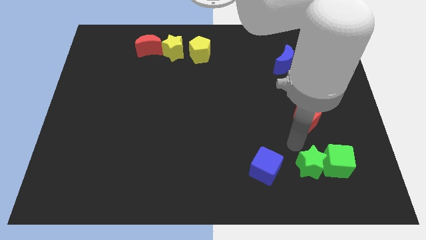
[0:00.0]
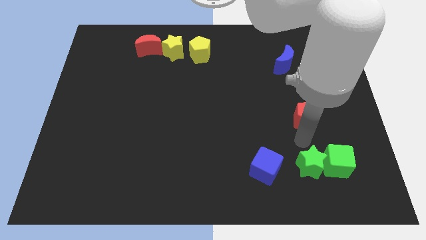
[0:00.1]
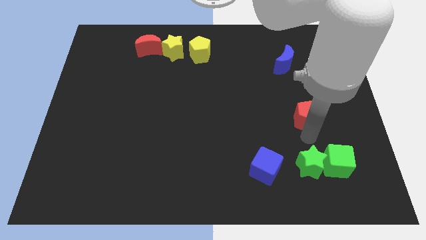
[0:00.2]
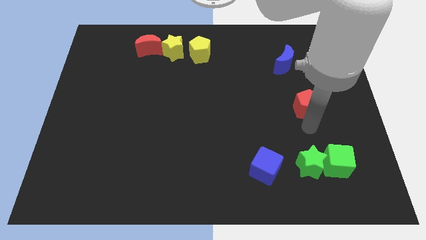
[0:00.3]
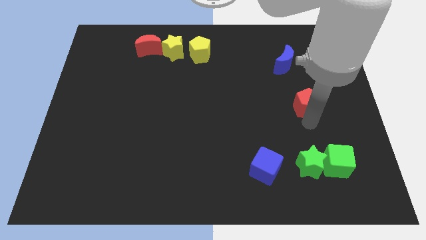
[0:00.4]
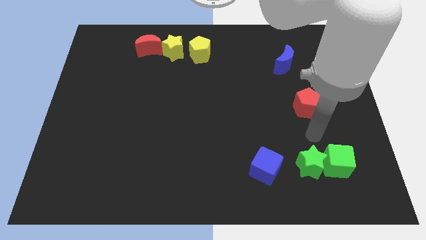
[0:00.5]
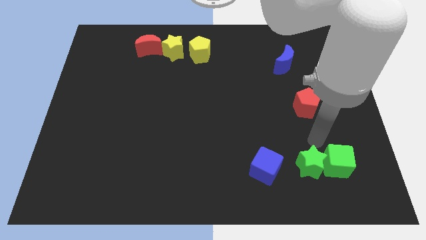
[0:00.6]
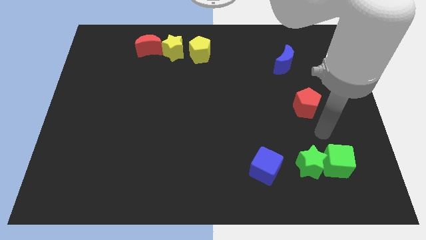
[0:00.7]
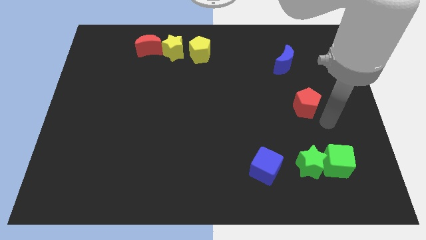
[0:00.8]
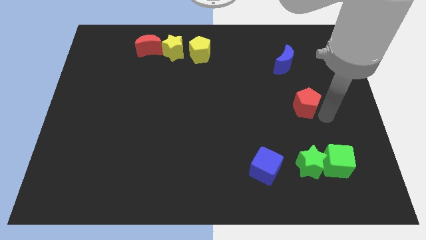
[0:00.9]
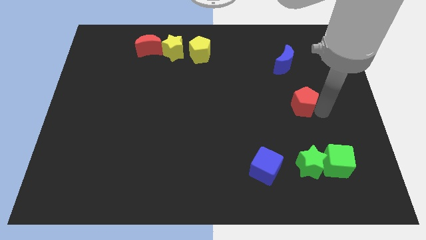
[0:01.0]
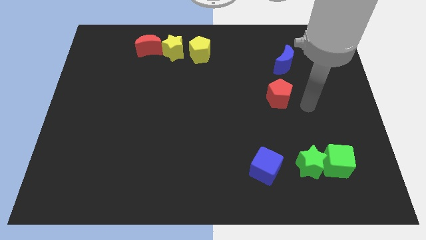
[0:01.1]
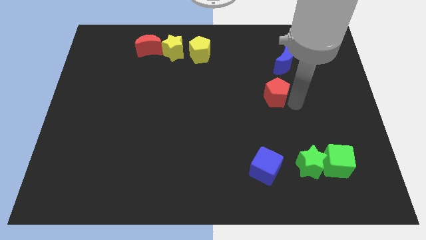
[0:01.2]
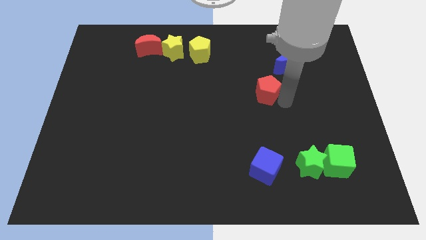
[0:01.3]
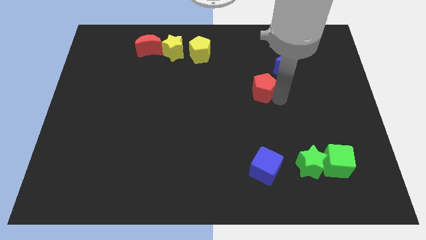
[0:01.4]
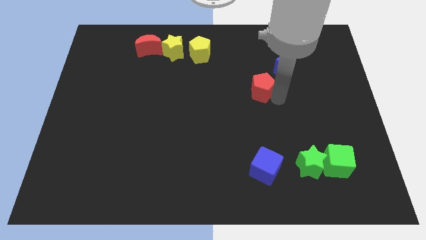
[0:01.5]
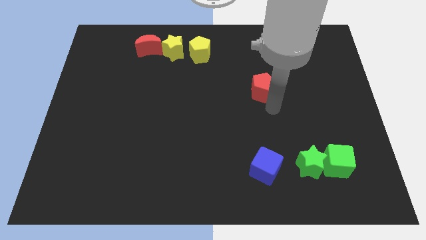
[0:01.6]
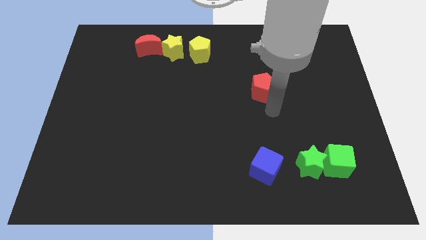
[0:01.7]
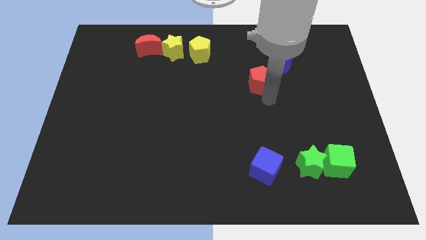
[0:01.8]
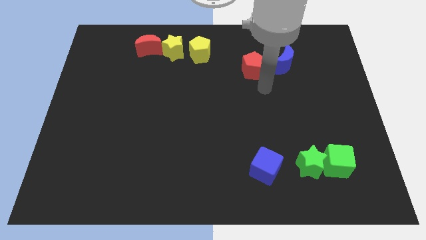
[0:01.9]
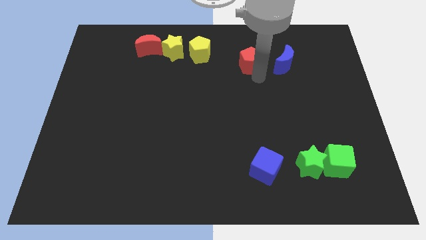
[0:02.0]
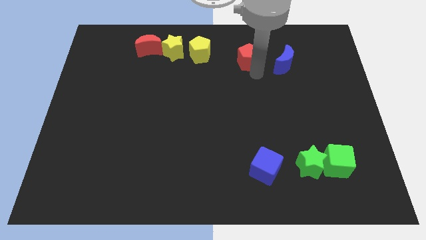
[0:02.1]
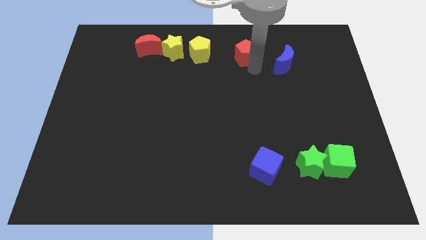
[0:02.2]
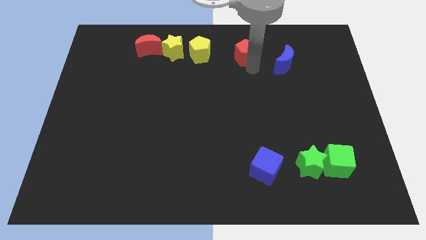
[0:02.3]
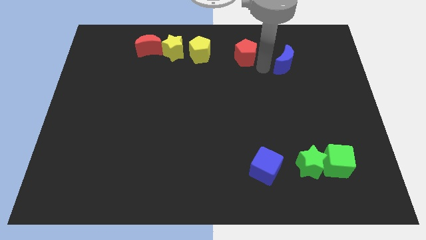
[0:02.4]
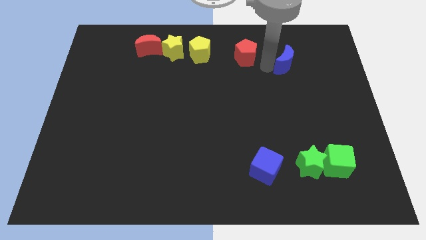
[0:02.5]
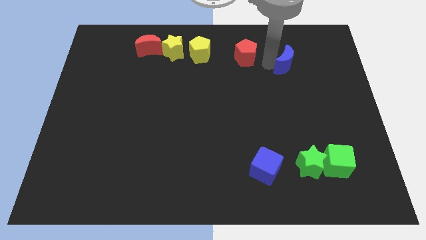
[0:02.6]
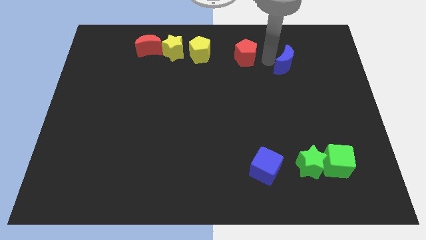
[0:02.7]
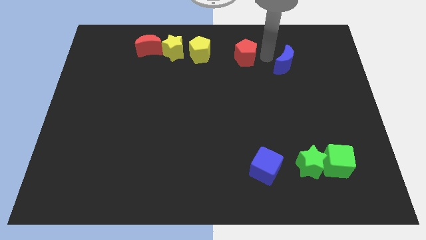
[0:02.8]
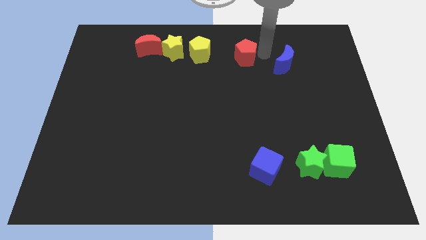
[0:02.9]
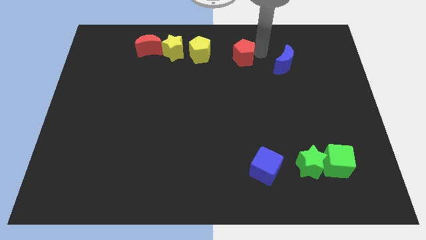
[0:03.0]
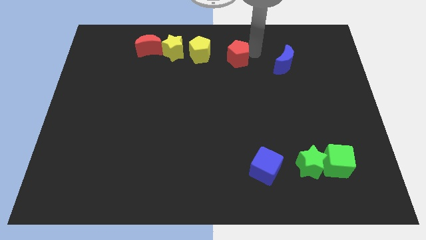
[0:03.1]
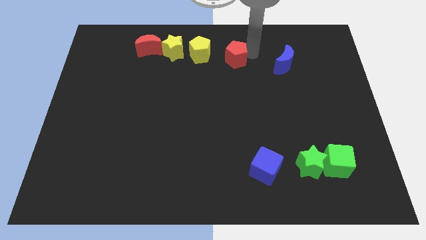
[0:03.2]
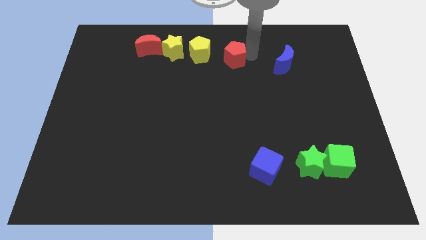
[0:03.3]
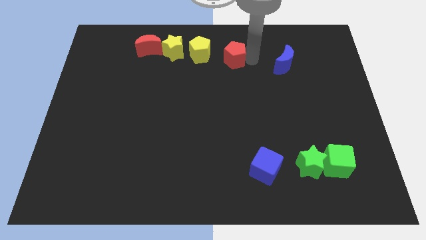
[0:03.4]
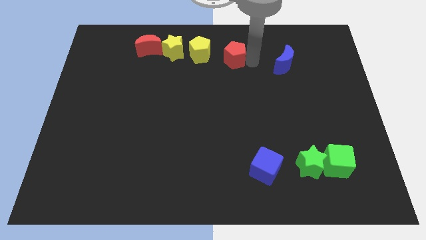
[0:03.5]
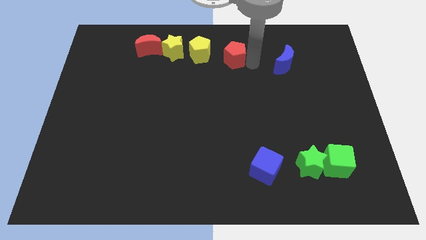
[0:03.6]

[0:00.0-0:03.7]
place the red pentagon diagonally right to yellow penatgon

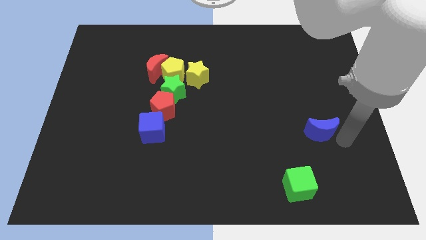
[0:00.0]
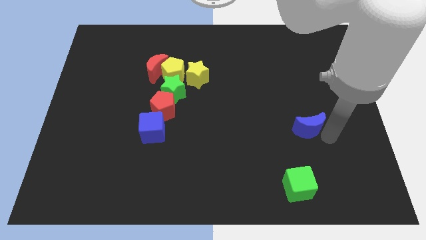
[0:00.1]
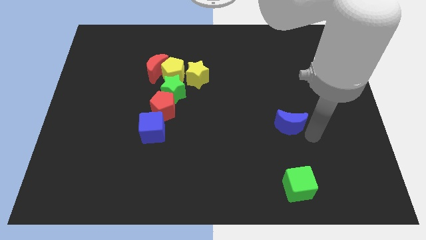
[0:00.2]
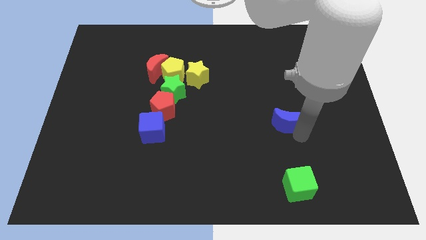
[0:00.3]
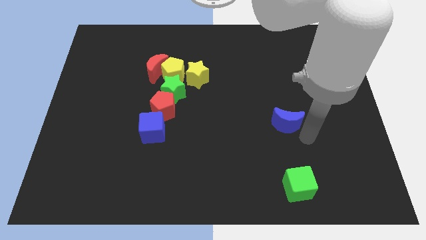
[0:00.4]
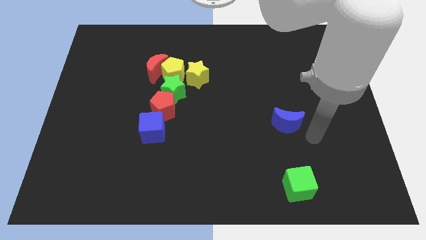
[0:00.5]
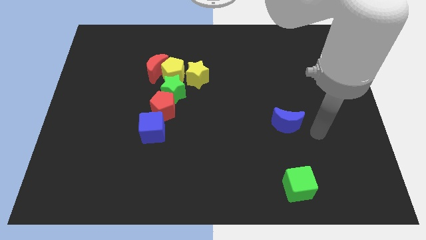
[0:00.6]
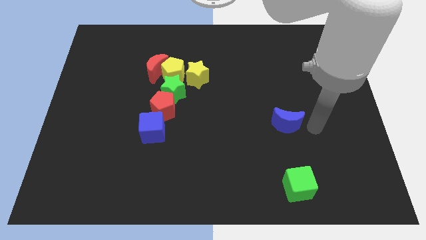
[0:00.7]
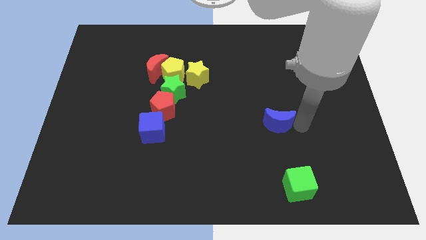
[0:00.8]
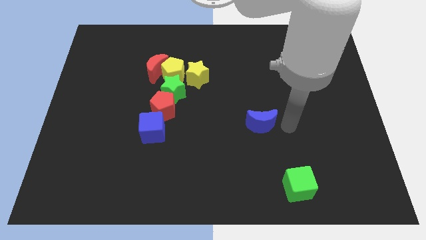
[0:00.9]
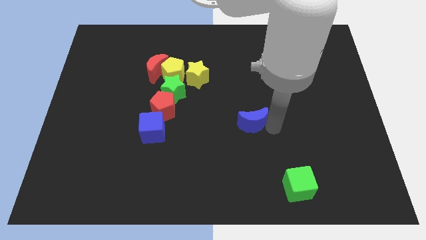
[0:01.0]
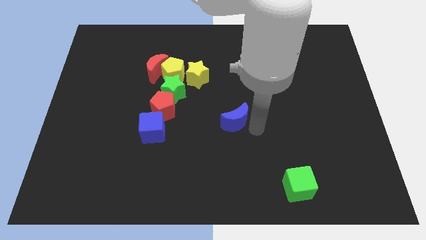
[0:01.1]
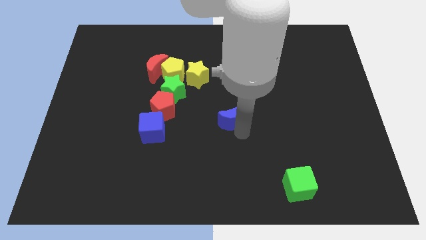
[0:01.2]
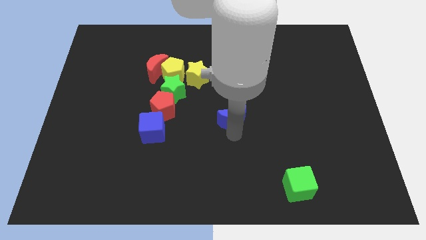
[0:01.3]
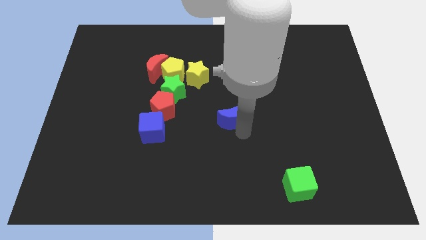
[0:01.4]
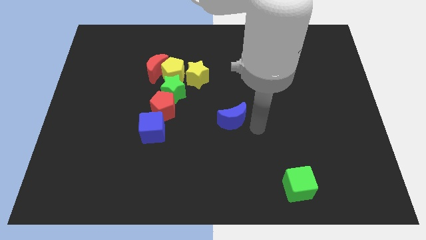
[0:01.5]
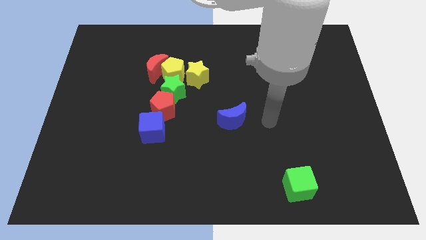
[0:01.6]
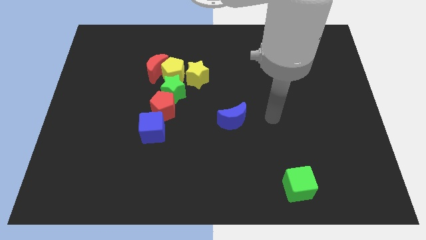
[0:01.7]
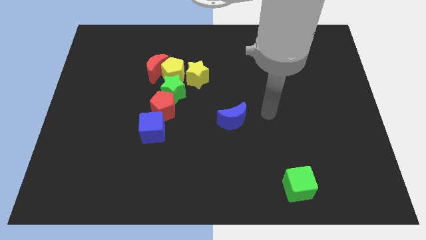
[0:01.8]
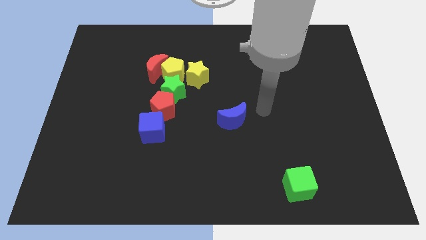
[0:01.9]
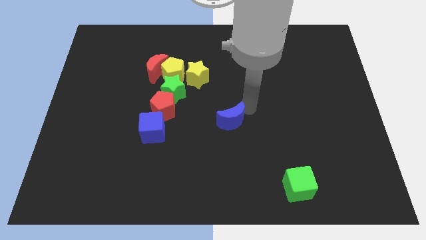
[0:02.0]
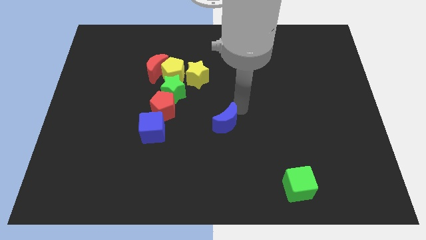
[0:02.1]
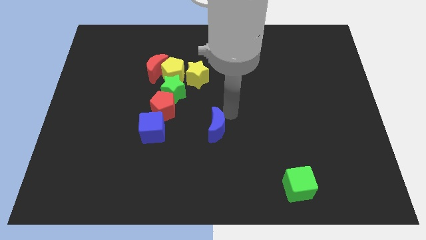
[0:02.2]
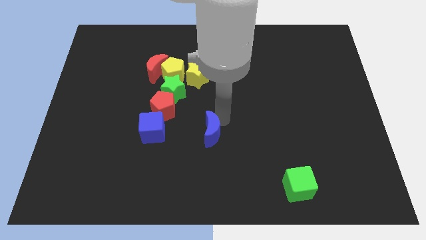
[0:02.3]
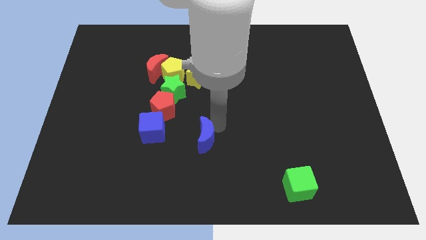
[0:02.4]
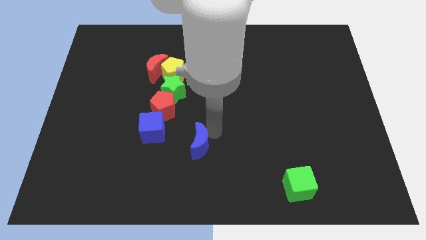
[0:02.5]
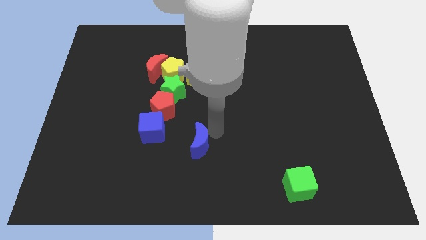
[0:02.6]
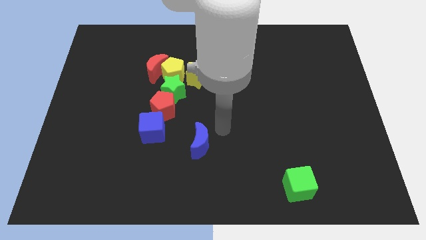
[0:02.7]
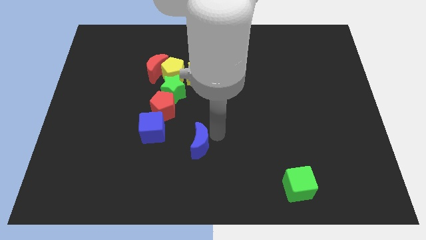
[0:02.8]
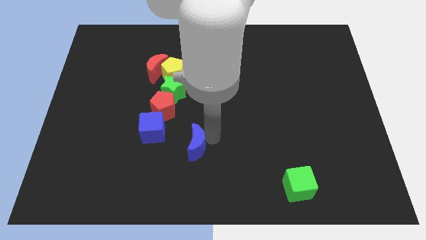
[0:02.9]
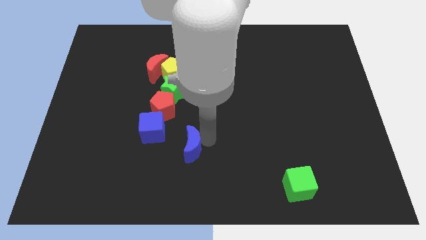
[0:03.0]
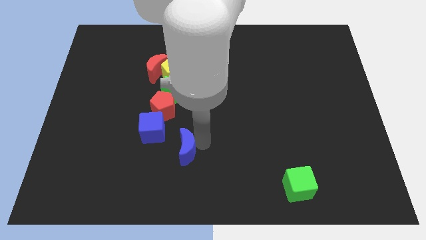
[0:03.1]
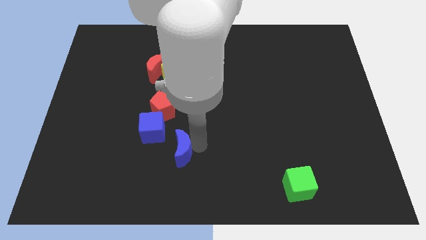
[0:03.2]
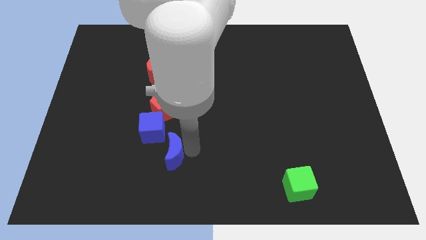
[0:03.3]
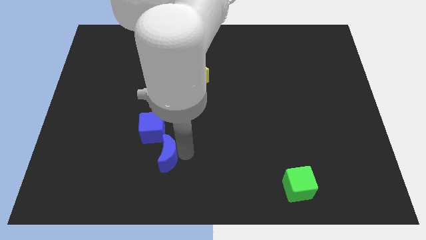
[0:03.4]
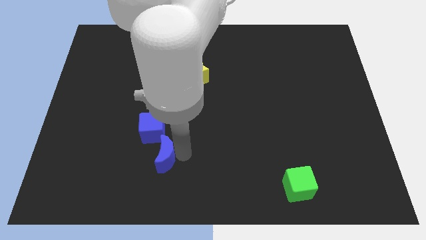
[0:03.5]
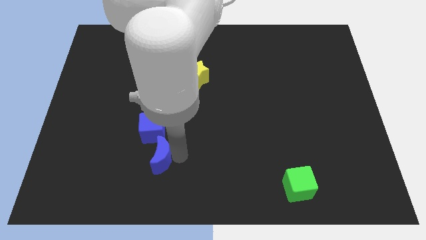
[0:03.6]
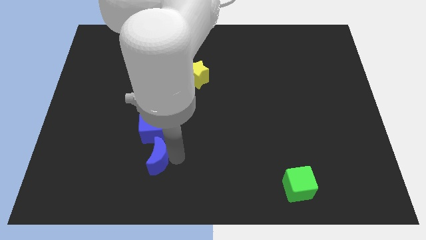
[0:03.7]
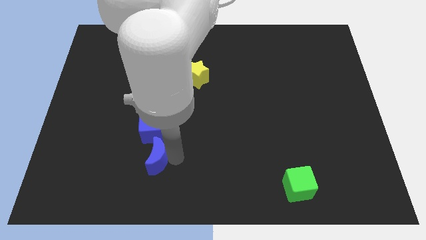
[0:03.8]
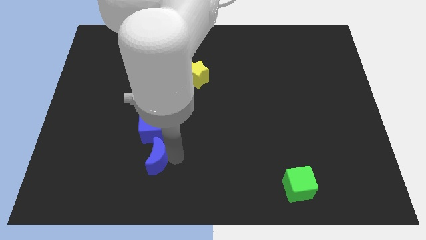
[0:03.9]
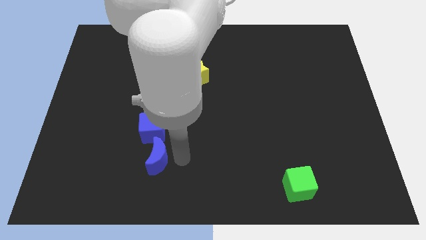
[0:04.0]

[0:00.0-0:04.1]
move the blue crescent to the bottom of the blue cube

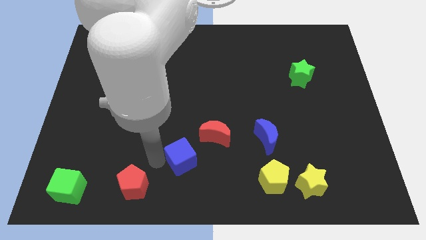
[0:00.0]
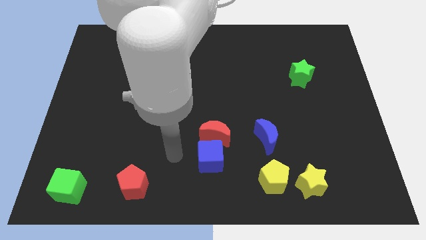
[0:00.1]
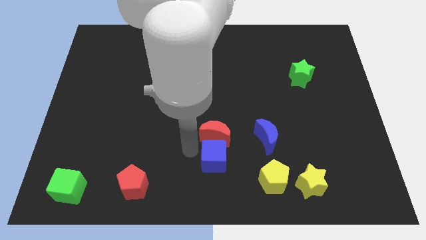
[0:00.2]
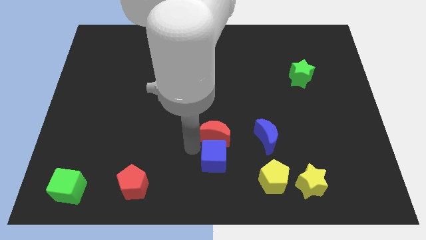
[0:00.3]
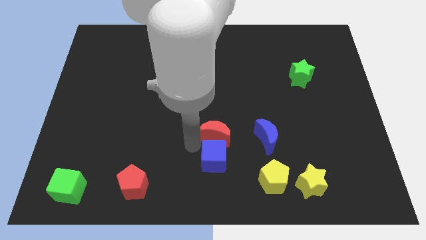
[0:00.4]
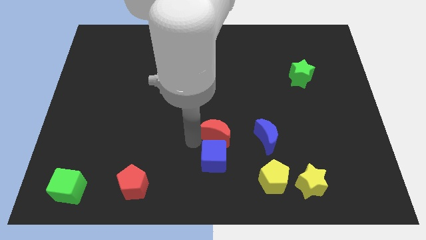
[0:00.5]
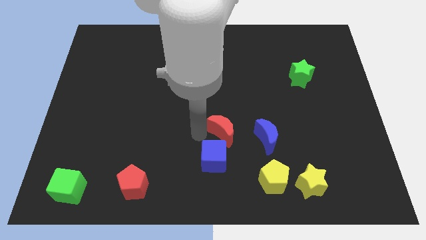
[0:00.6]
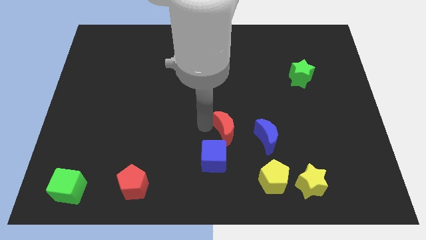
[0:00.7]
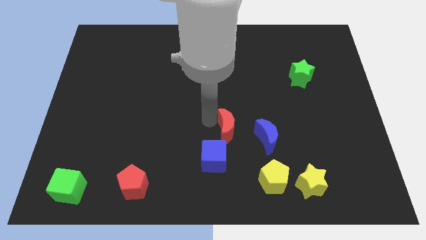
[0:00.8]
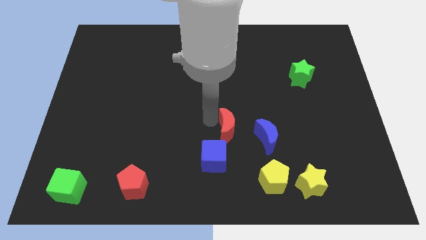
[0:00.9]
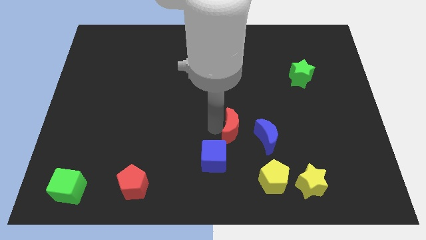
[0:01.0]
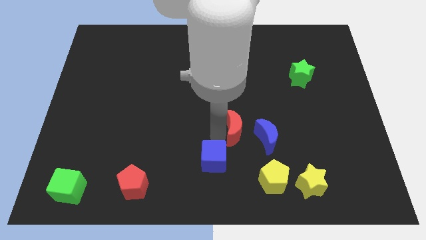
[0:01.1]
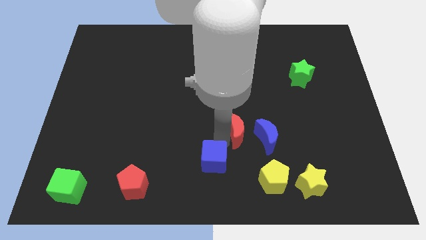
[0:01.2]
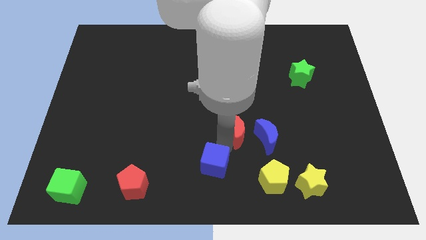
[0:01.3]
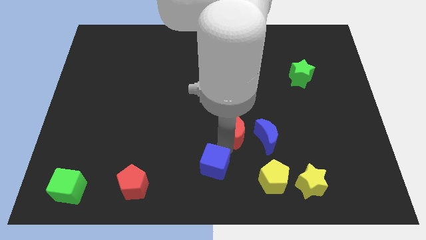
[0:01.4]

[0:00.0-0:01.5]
turn the red moon slightly
